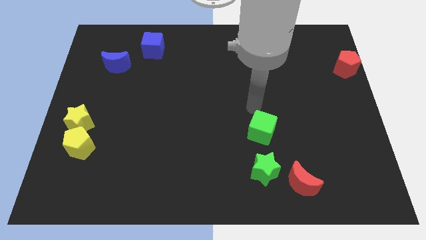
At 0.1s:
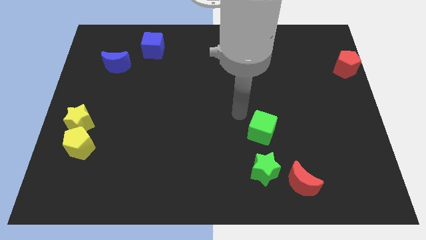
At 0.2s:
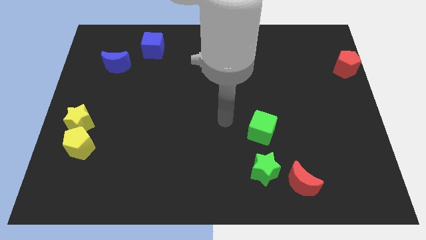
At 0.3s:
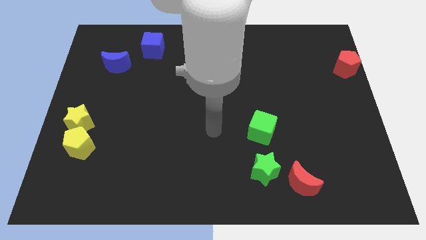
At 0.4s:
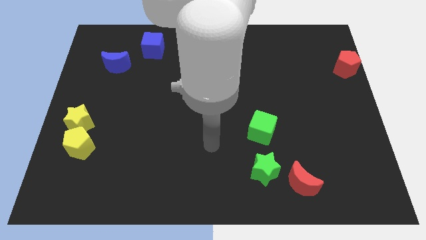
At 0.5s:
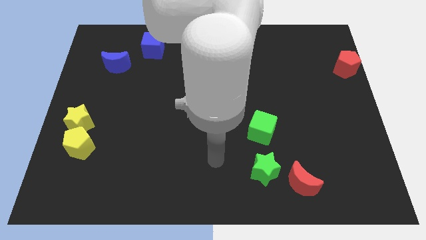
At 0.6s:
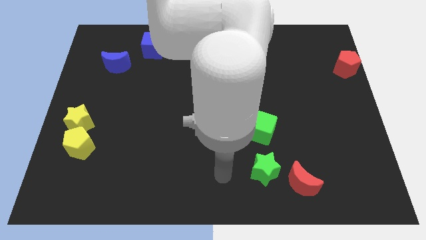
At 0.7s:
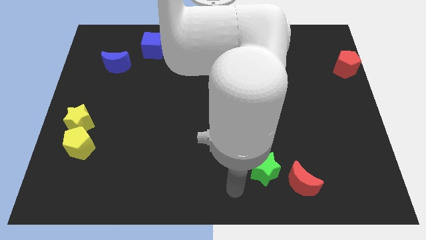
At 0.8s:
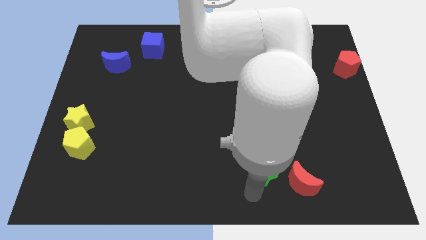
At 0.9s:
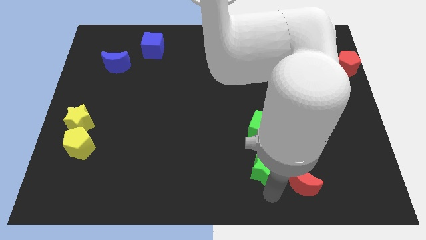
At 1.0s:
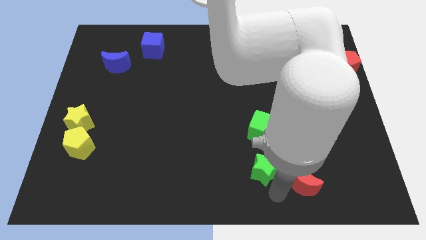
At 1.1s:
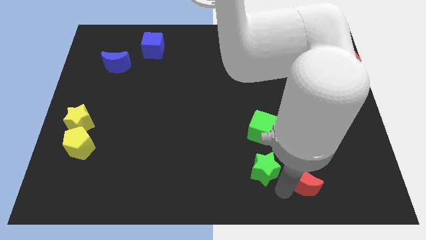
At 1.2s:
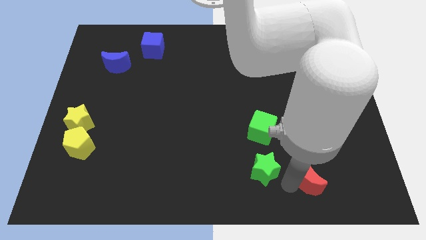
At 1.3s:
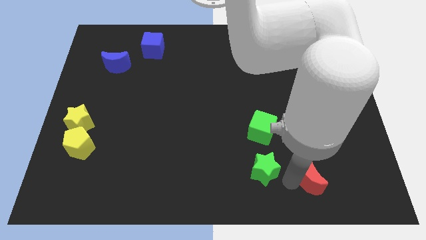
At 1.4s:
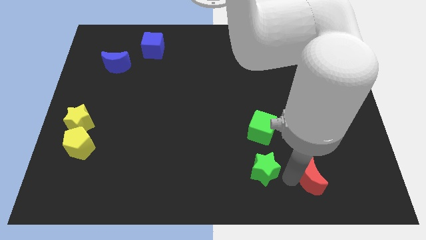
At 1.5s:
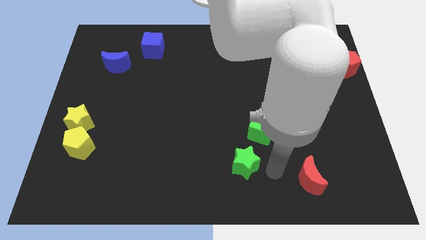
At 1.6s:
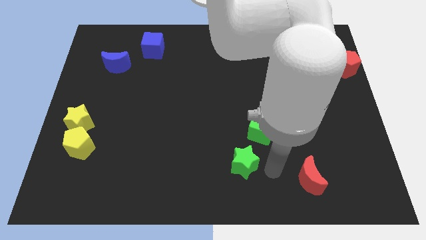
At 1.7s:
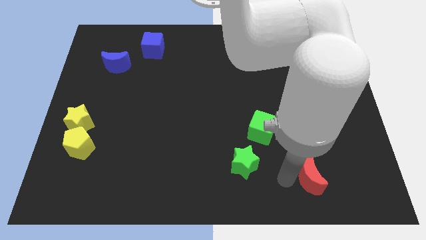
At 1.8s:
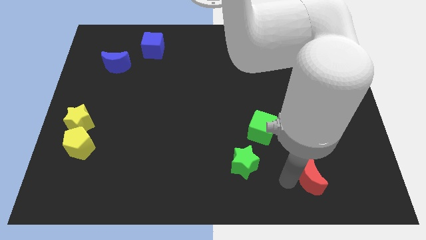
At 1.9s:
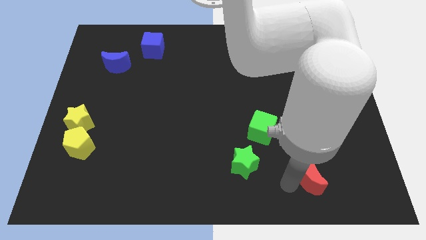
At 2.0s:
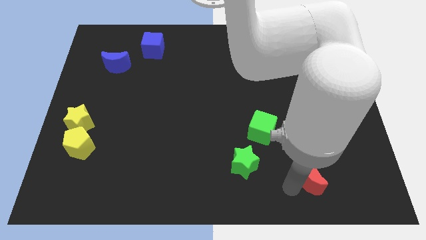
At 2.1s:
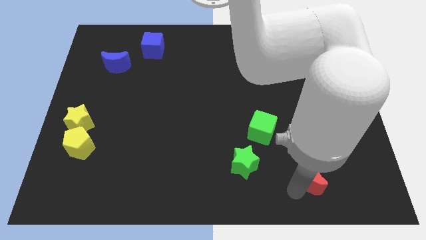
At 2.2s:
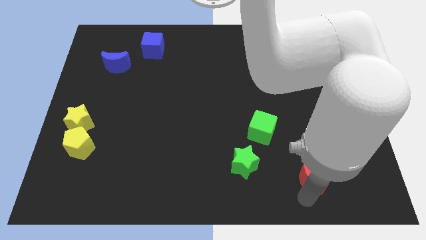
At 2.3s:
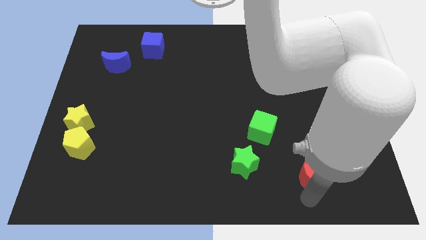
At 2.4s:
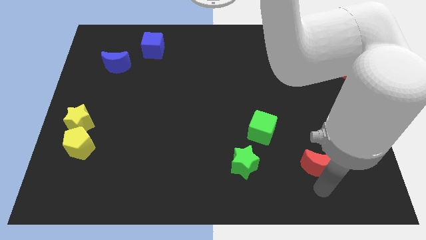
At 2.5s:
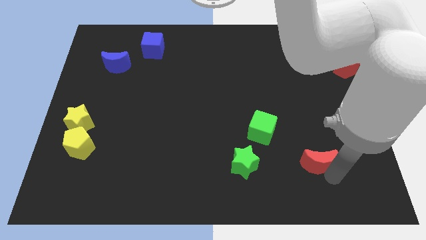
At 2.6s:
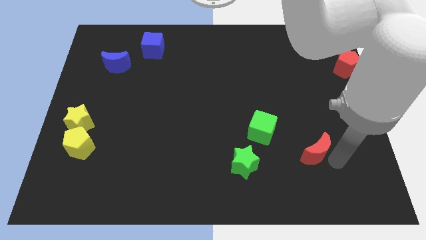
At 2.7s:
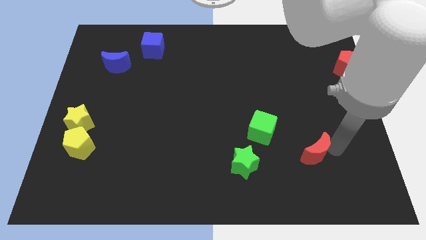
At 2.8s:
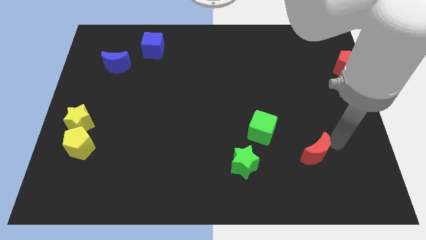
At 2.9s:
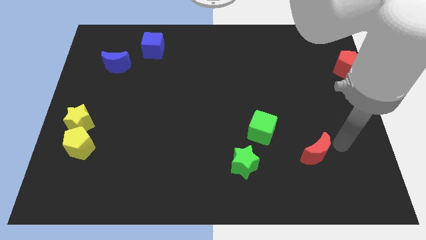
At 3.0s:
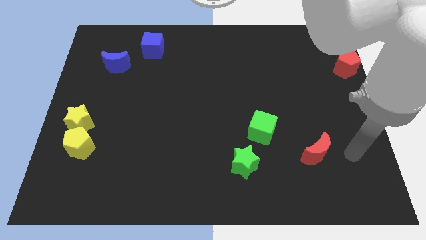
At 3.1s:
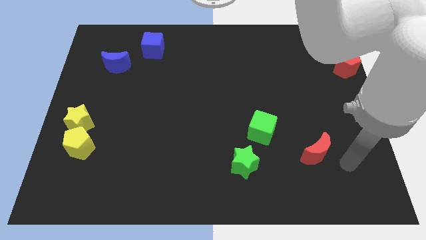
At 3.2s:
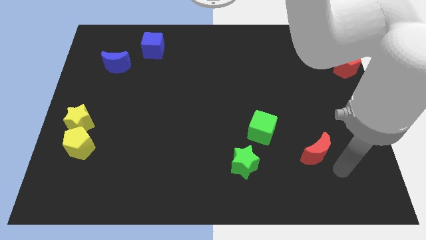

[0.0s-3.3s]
push the green star and move the red moon to the right of green cube

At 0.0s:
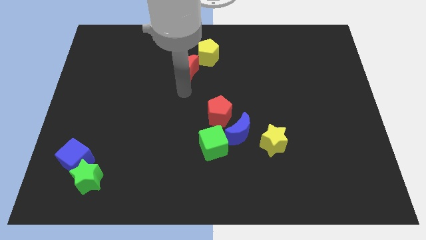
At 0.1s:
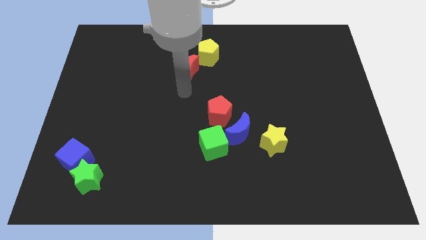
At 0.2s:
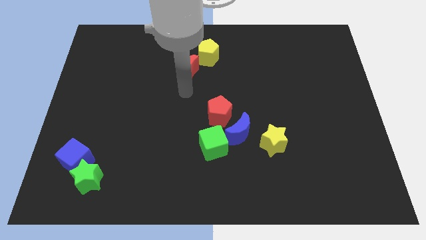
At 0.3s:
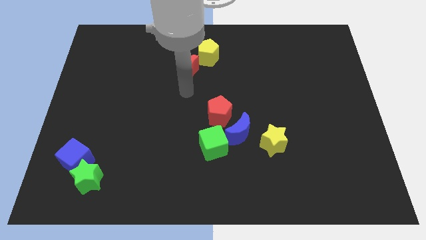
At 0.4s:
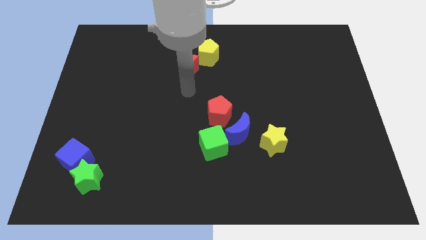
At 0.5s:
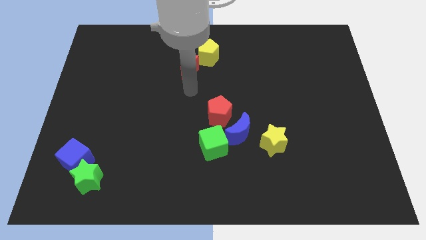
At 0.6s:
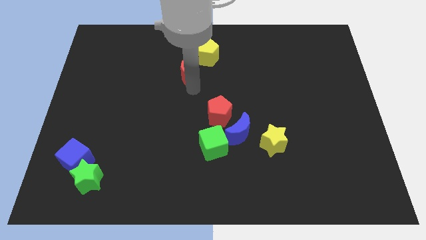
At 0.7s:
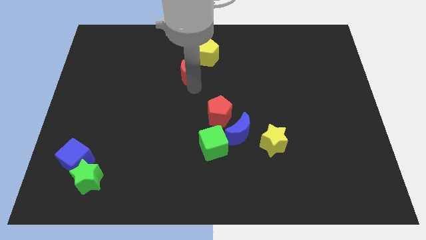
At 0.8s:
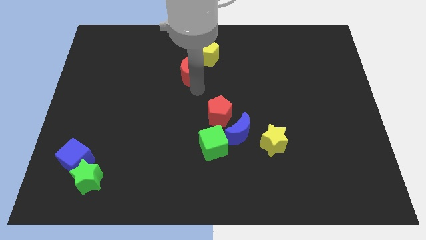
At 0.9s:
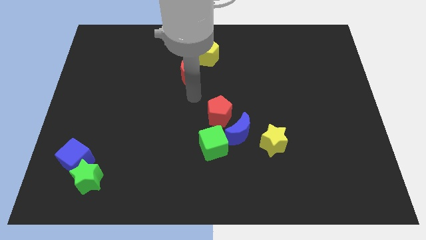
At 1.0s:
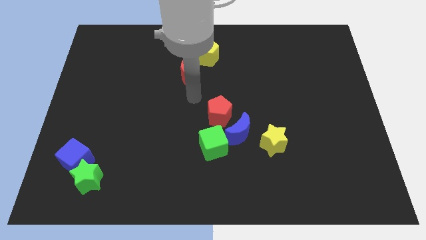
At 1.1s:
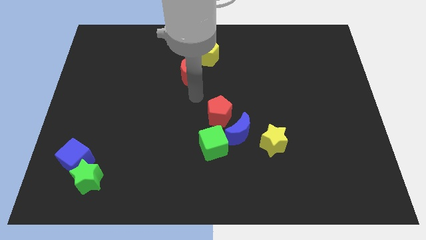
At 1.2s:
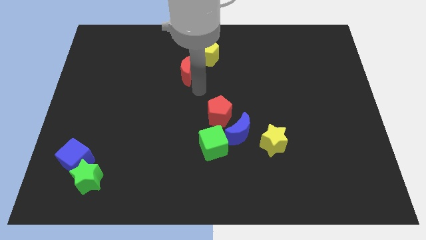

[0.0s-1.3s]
place your hand in between the red crescent and red pentagon

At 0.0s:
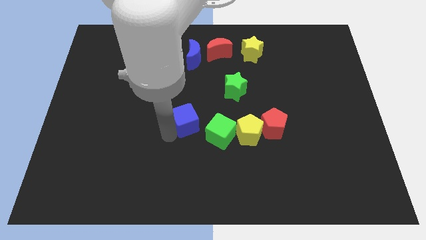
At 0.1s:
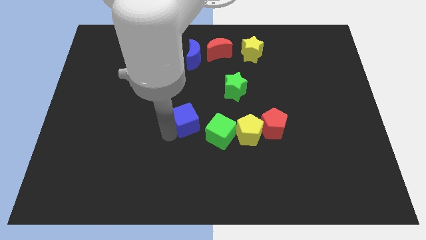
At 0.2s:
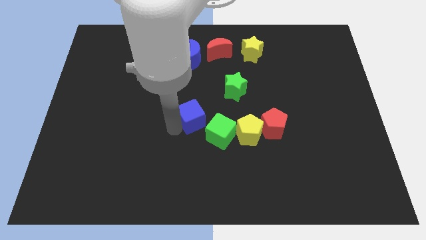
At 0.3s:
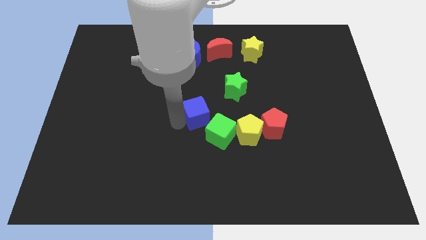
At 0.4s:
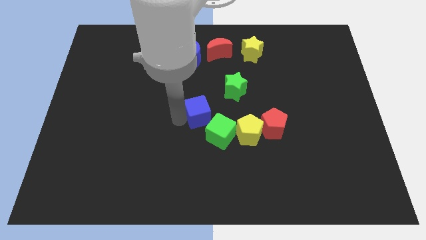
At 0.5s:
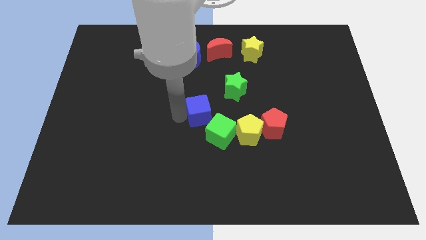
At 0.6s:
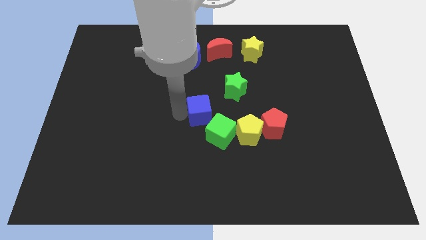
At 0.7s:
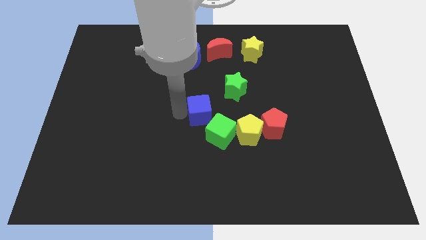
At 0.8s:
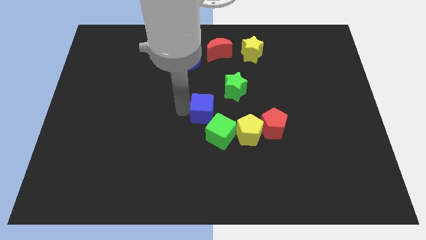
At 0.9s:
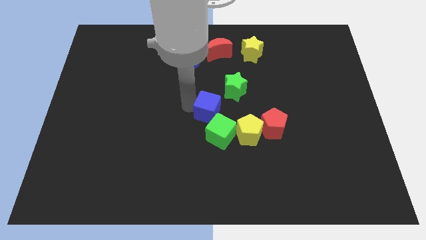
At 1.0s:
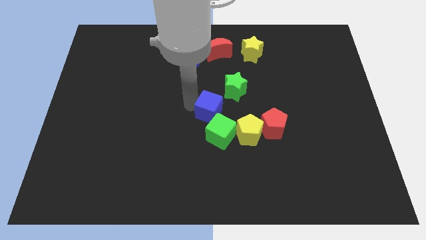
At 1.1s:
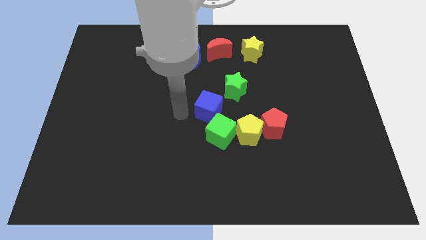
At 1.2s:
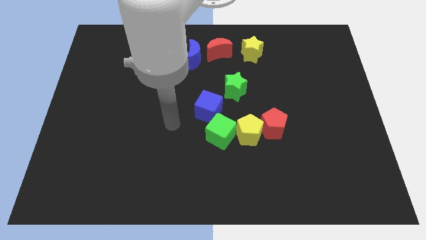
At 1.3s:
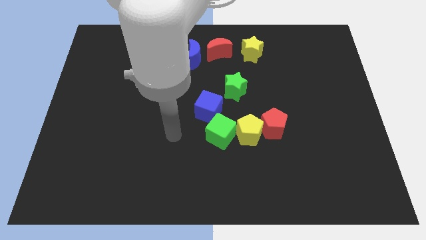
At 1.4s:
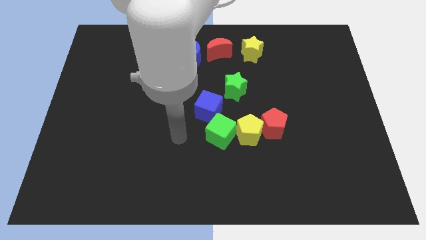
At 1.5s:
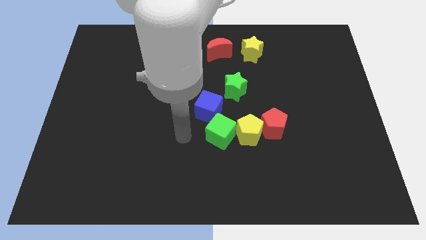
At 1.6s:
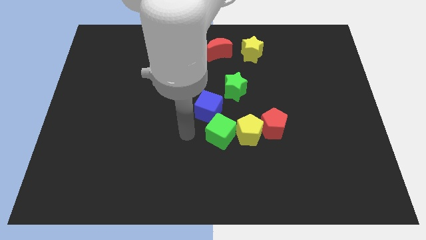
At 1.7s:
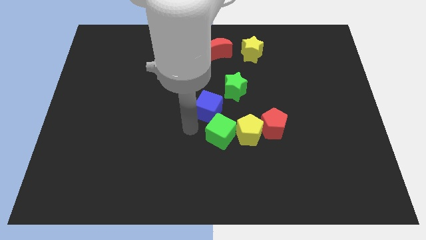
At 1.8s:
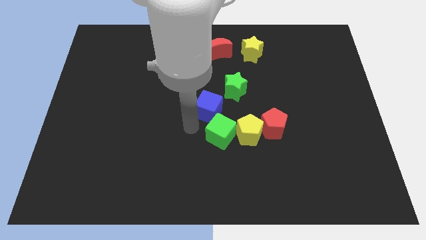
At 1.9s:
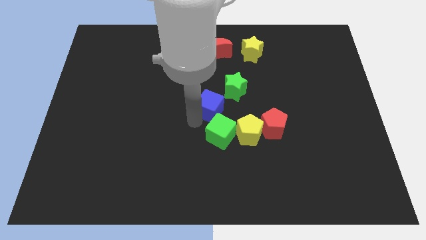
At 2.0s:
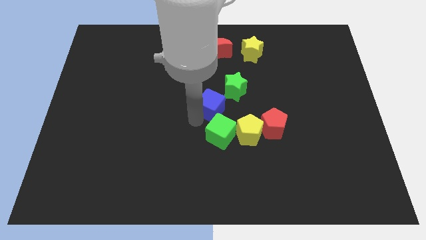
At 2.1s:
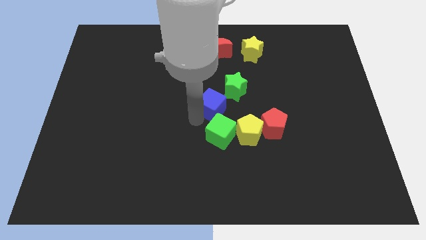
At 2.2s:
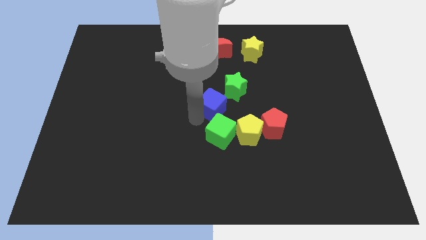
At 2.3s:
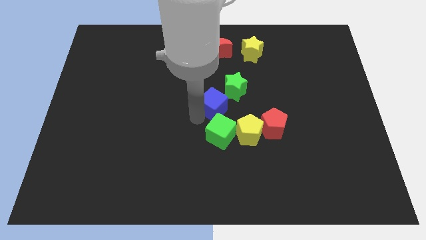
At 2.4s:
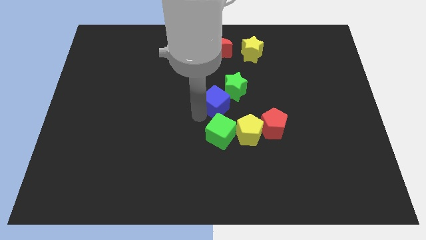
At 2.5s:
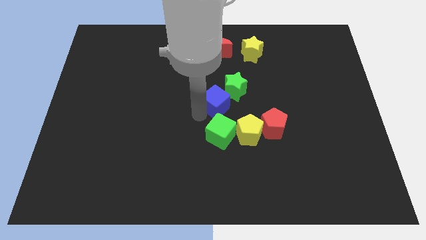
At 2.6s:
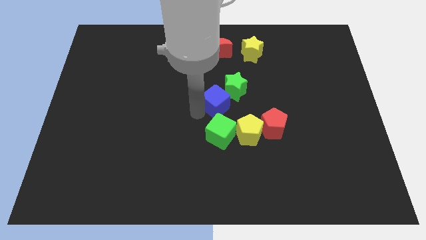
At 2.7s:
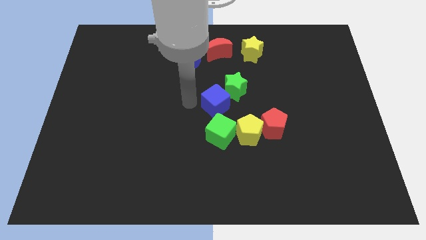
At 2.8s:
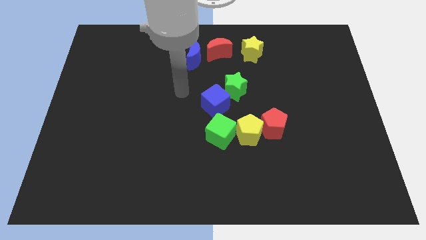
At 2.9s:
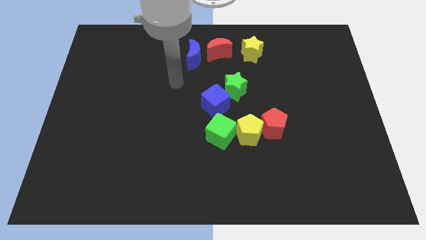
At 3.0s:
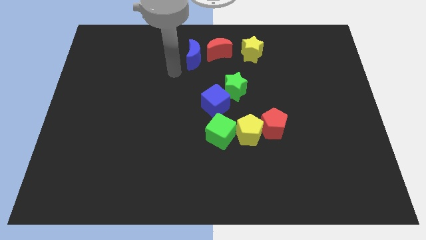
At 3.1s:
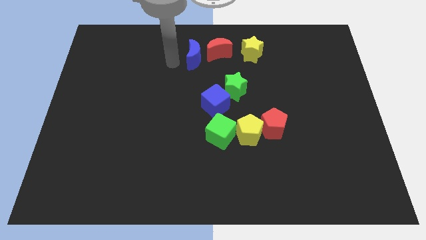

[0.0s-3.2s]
push the blue cube top of the green cube

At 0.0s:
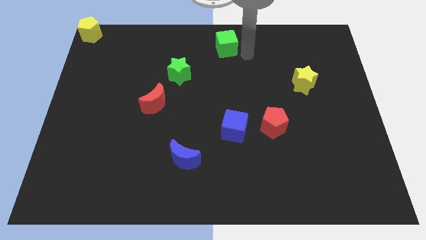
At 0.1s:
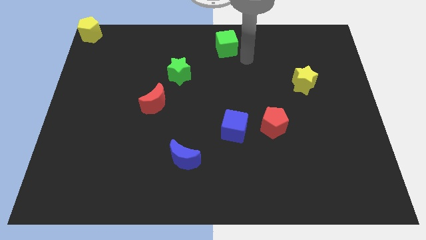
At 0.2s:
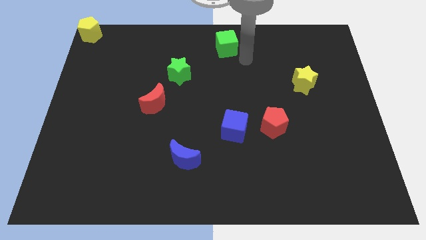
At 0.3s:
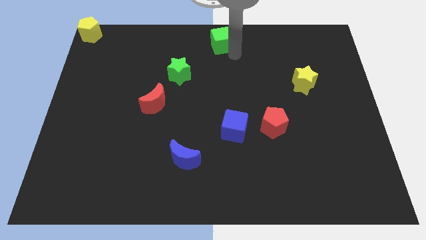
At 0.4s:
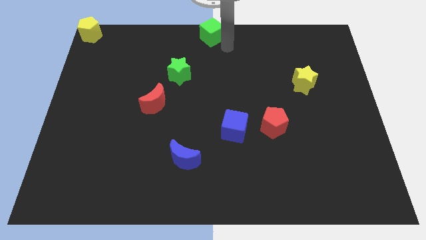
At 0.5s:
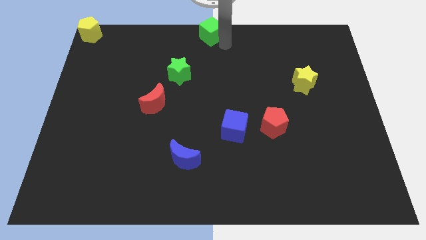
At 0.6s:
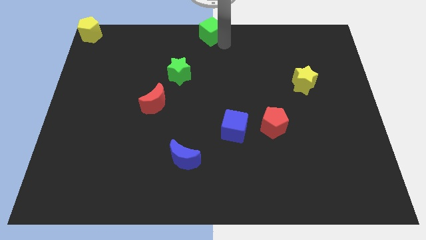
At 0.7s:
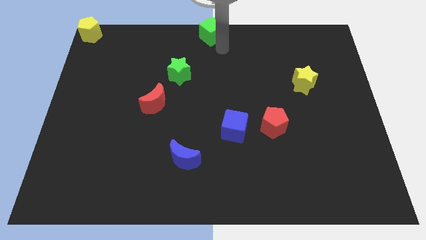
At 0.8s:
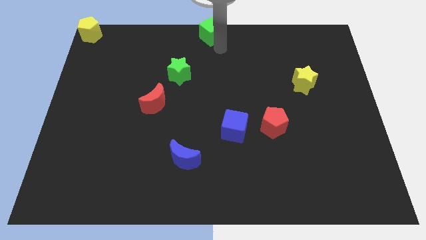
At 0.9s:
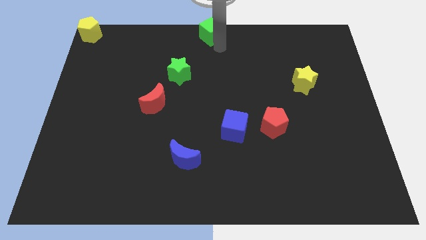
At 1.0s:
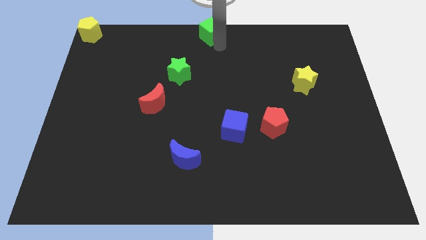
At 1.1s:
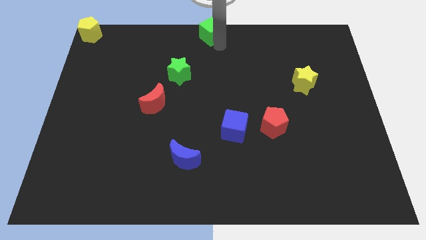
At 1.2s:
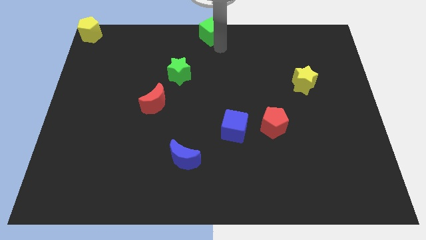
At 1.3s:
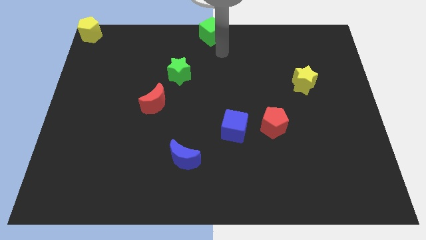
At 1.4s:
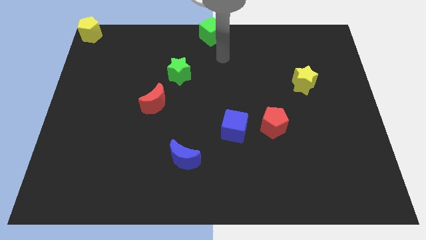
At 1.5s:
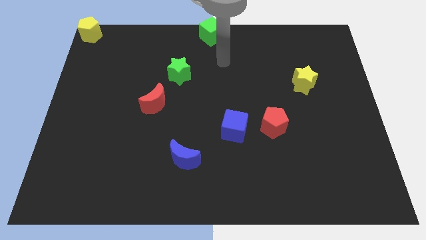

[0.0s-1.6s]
move the green cube to the top center of the board
